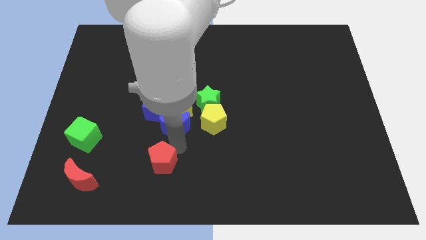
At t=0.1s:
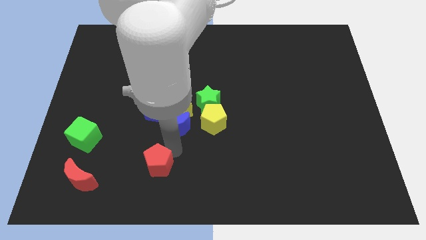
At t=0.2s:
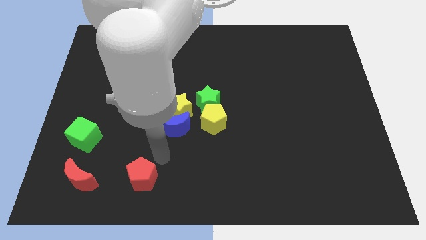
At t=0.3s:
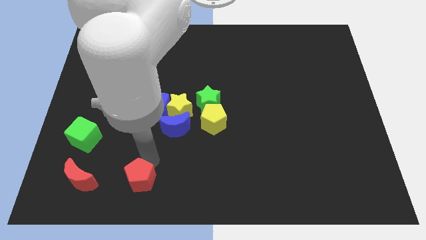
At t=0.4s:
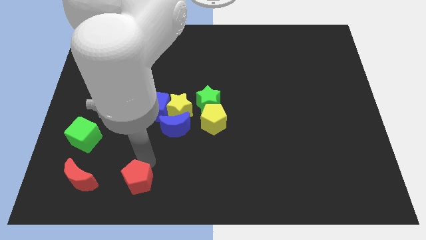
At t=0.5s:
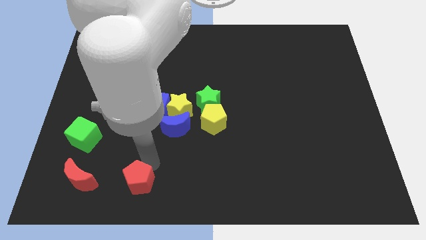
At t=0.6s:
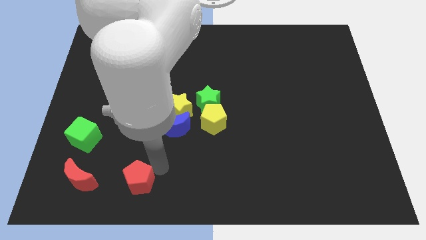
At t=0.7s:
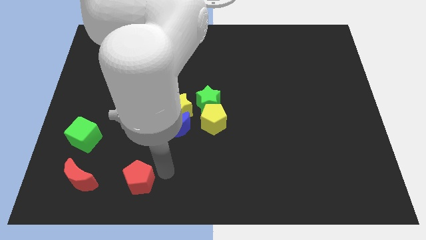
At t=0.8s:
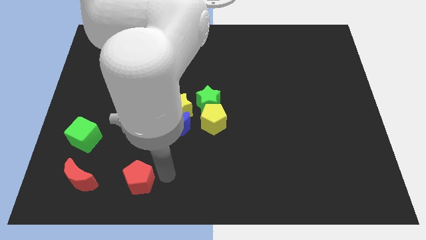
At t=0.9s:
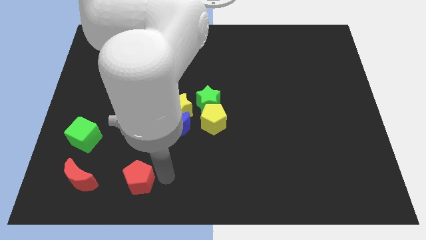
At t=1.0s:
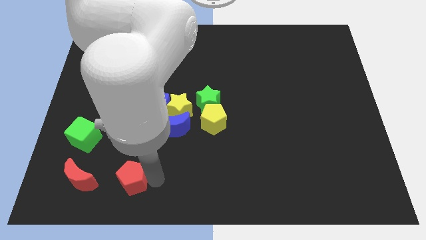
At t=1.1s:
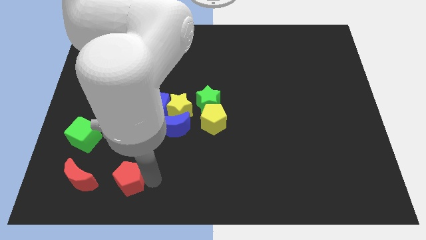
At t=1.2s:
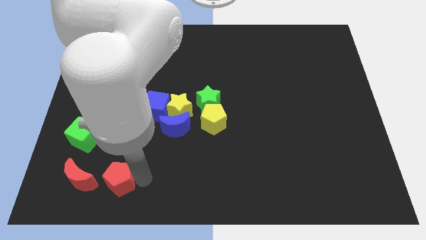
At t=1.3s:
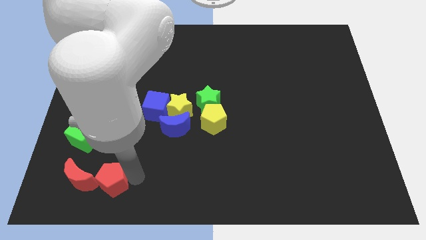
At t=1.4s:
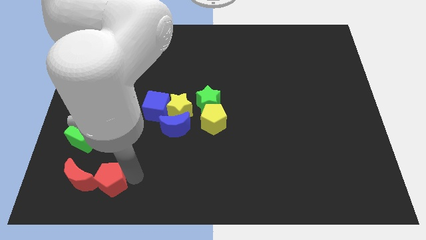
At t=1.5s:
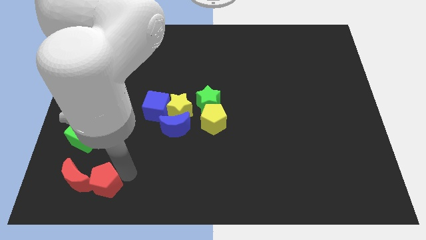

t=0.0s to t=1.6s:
move the red pentagon right to the red crescent

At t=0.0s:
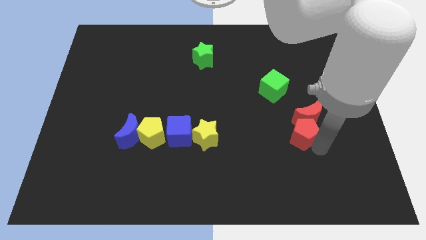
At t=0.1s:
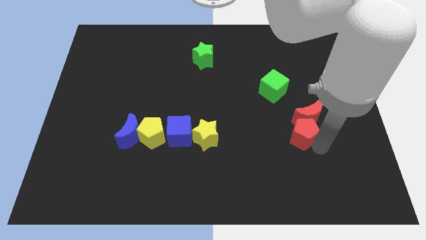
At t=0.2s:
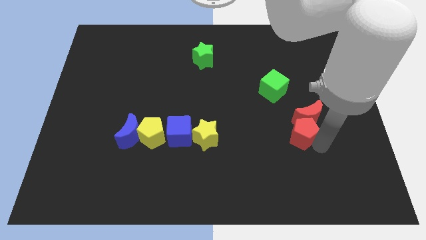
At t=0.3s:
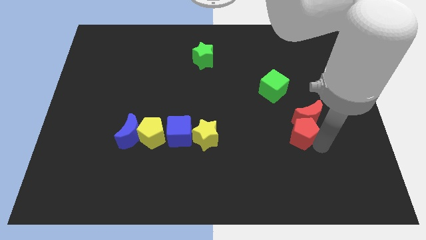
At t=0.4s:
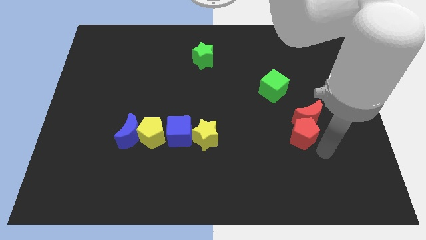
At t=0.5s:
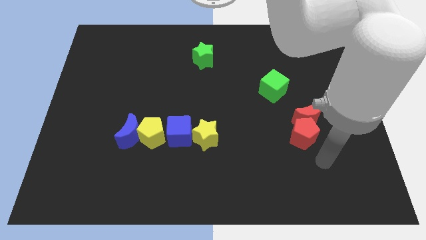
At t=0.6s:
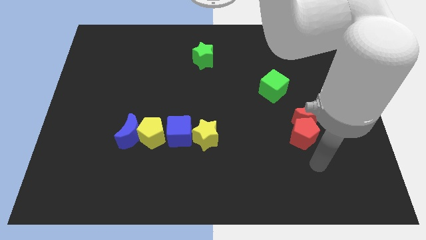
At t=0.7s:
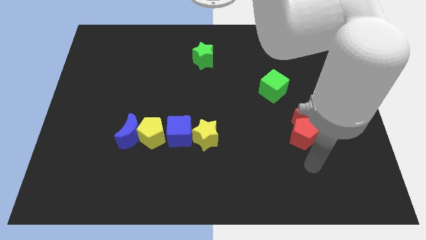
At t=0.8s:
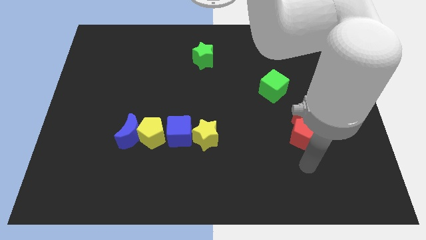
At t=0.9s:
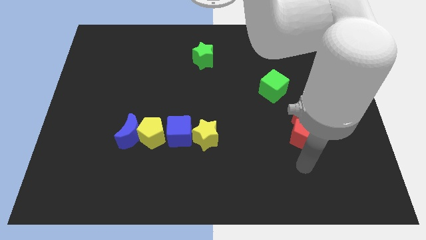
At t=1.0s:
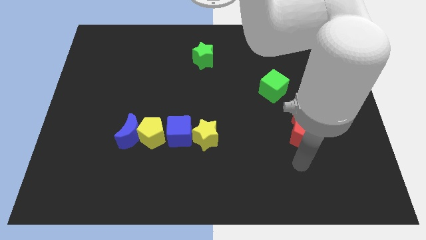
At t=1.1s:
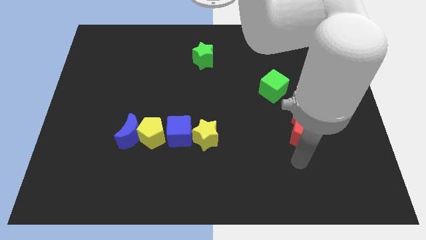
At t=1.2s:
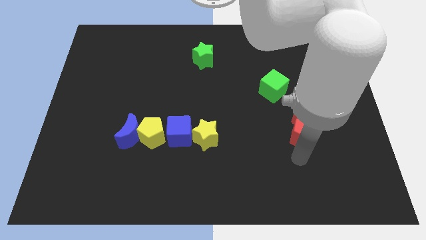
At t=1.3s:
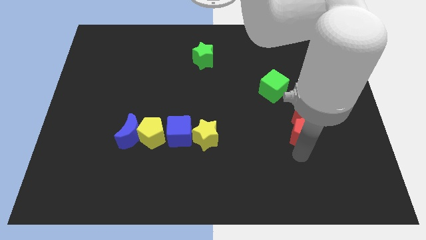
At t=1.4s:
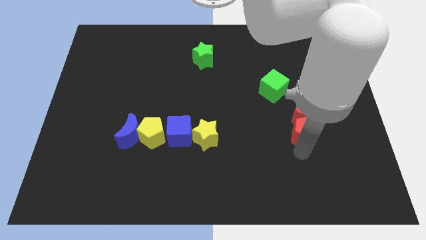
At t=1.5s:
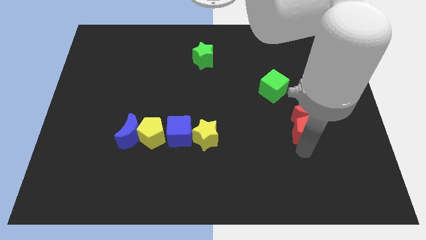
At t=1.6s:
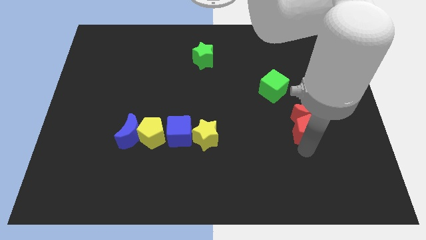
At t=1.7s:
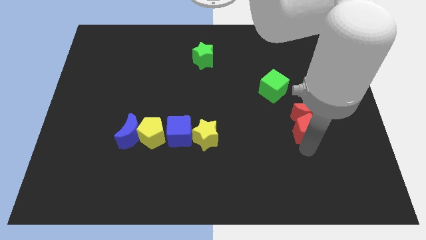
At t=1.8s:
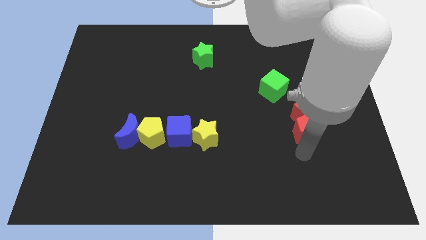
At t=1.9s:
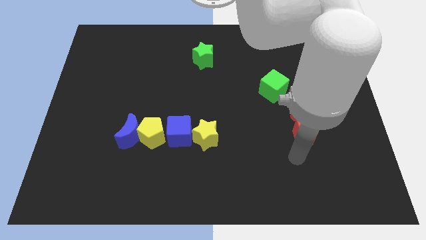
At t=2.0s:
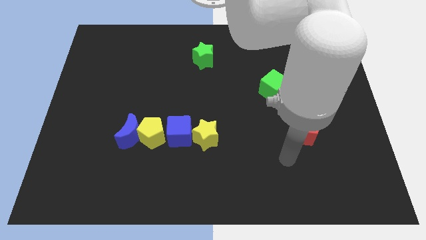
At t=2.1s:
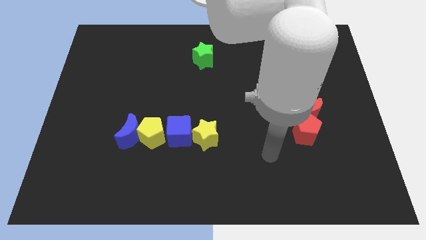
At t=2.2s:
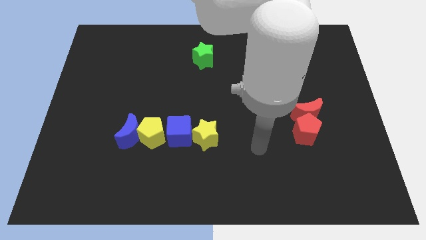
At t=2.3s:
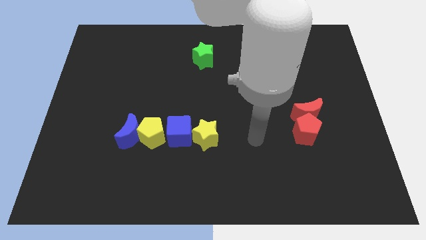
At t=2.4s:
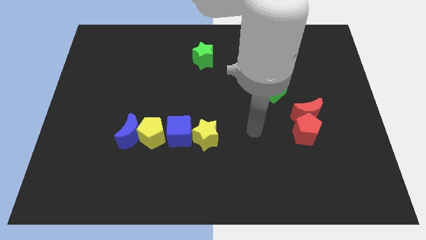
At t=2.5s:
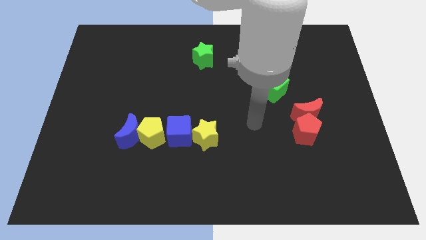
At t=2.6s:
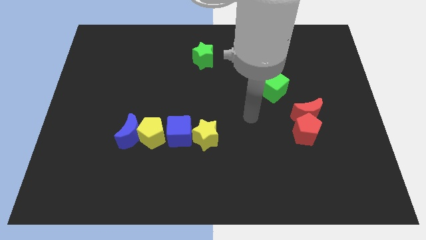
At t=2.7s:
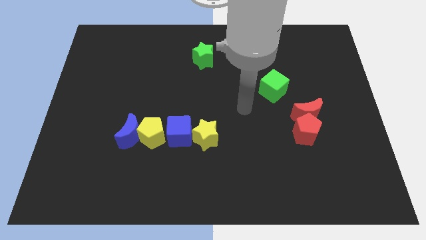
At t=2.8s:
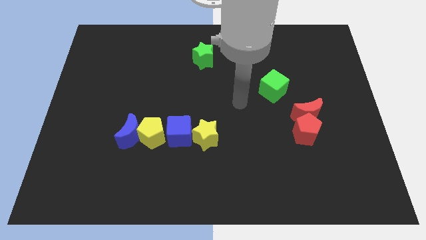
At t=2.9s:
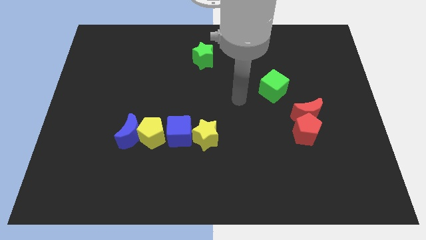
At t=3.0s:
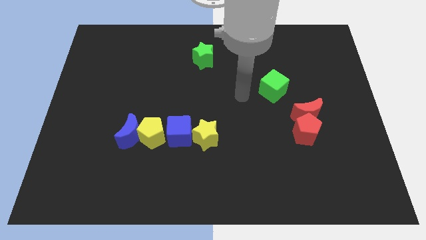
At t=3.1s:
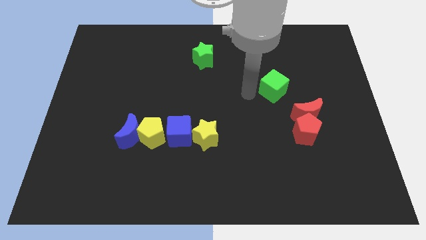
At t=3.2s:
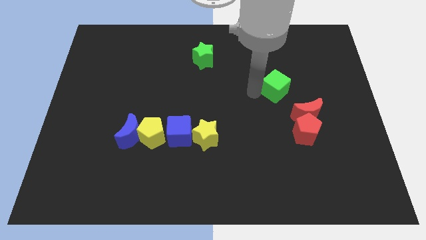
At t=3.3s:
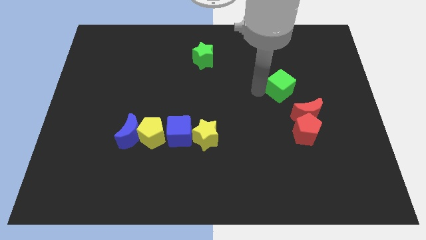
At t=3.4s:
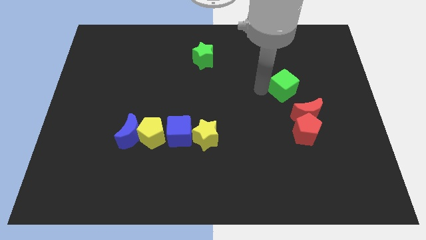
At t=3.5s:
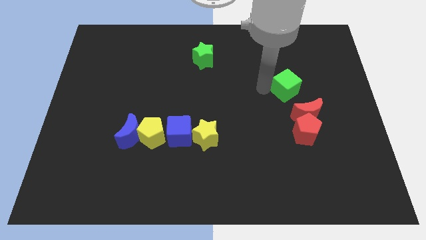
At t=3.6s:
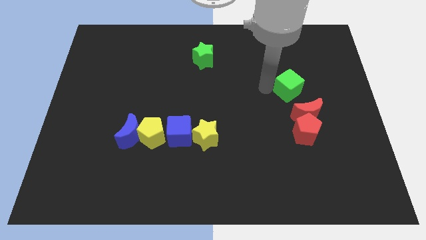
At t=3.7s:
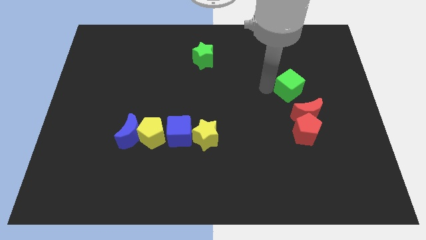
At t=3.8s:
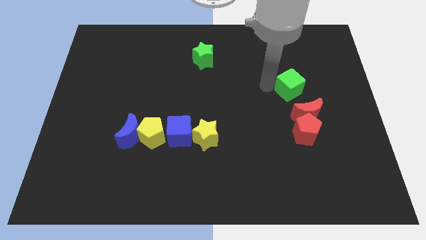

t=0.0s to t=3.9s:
push green cube slightly to the right

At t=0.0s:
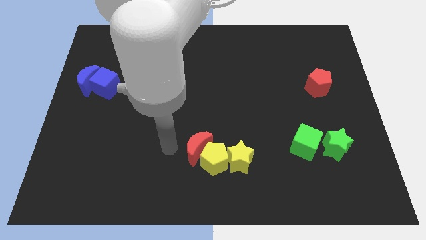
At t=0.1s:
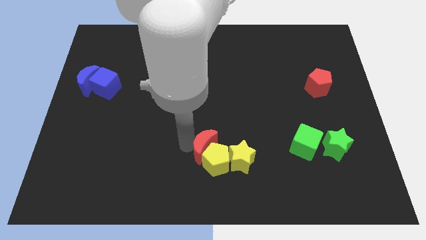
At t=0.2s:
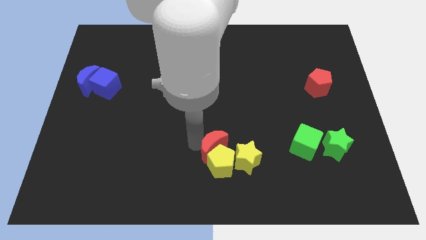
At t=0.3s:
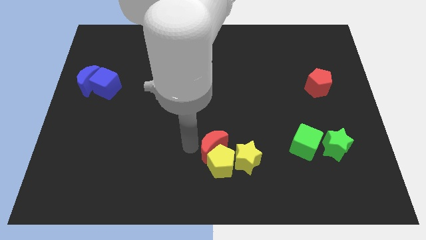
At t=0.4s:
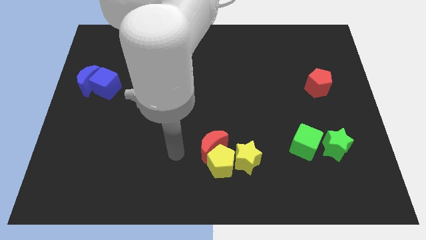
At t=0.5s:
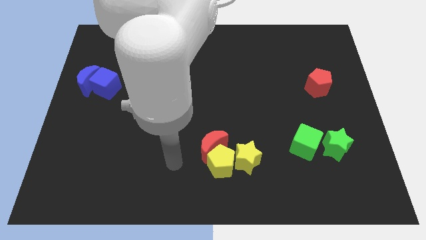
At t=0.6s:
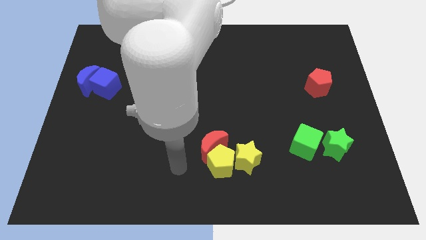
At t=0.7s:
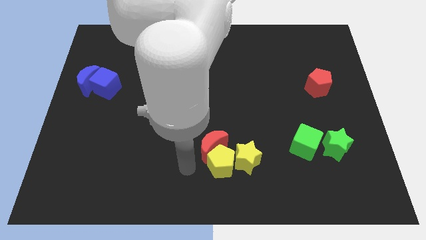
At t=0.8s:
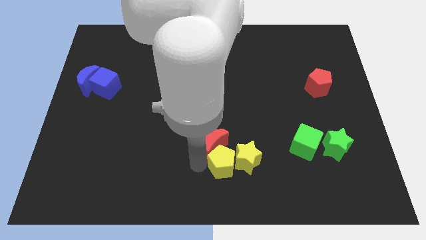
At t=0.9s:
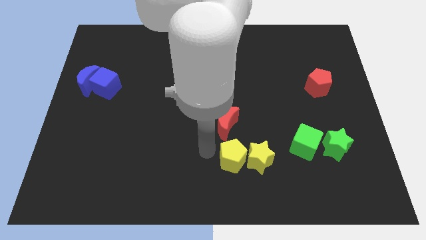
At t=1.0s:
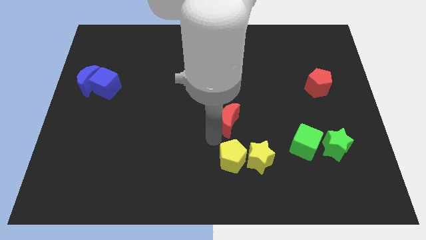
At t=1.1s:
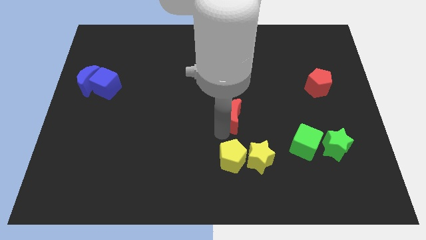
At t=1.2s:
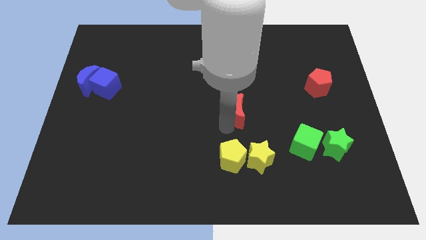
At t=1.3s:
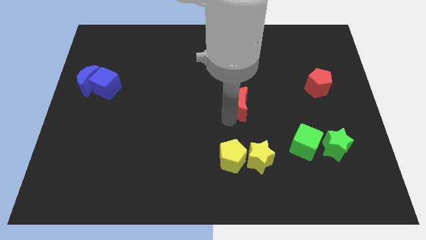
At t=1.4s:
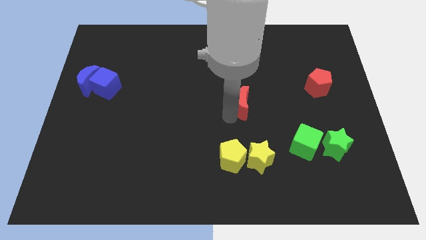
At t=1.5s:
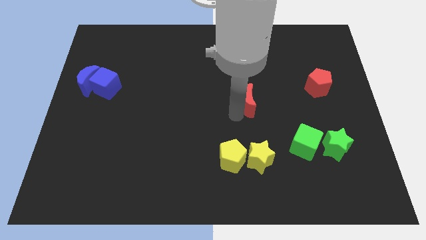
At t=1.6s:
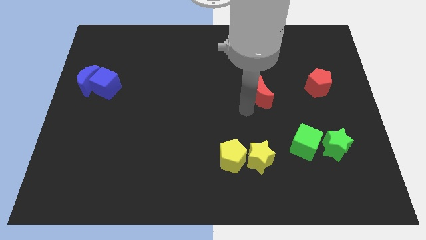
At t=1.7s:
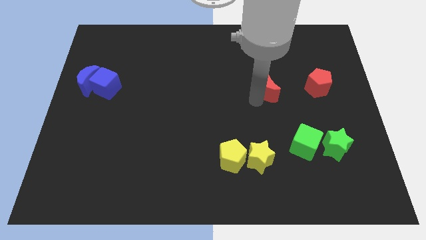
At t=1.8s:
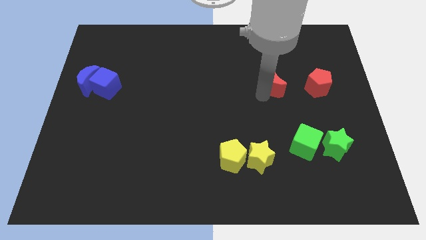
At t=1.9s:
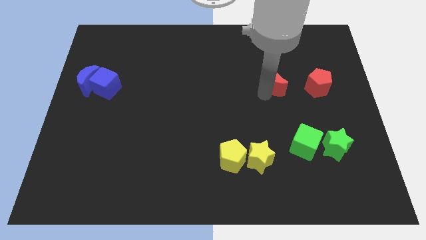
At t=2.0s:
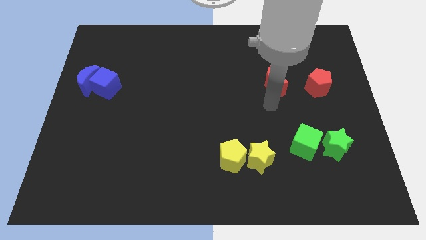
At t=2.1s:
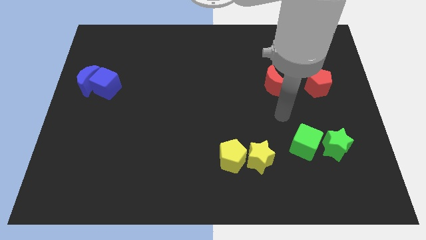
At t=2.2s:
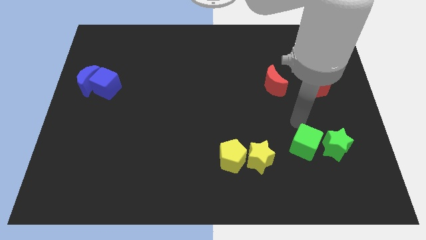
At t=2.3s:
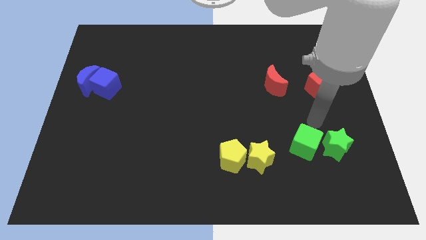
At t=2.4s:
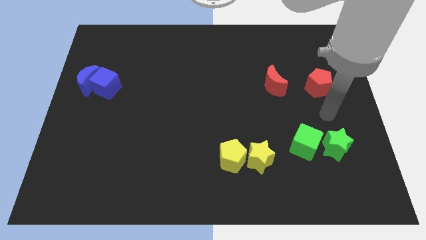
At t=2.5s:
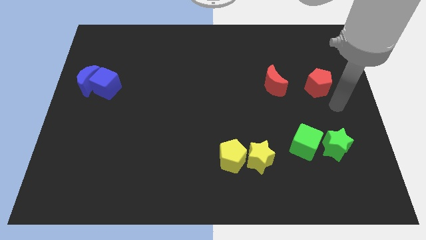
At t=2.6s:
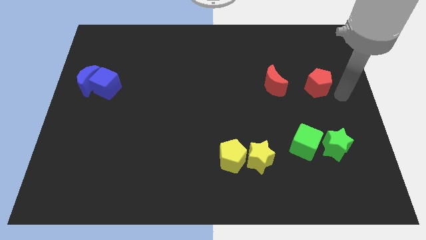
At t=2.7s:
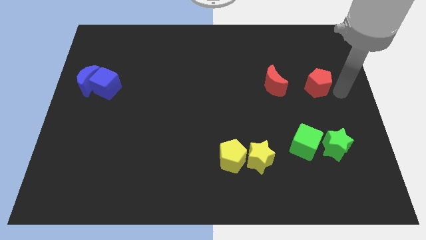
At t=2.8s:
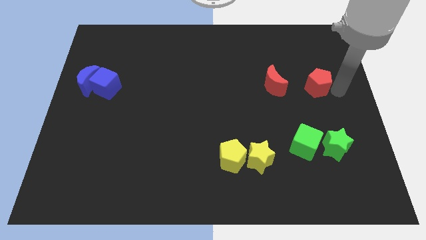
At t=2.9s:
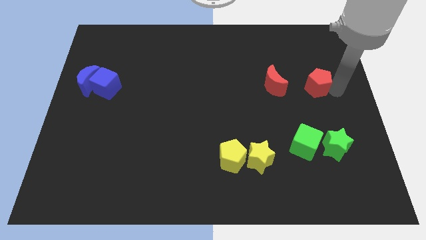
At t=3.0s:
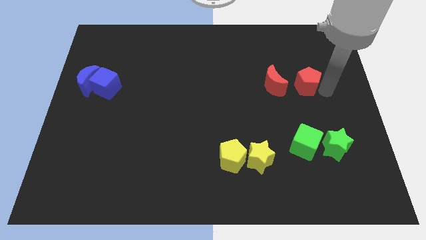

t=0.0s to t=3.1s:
place the red moon left to the red pentagon

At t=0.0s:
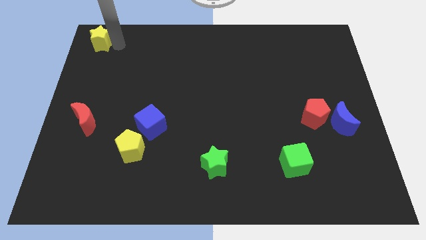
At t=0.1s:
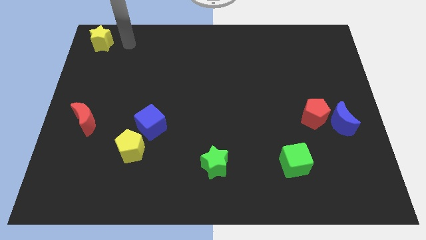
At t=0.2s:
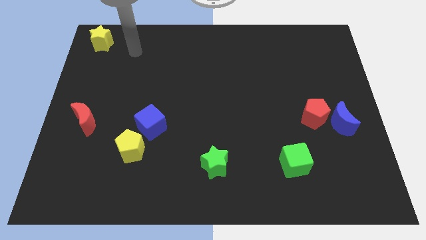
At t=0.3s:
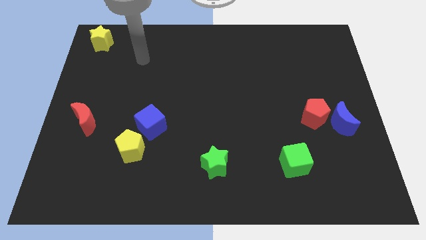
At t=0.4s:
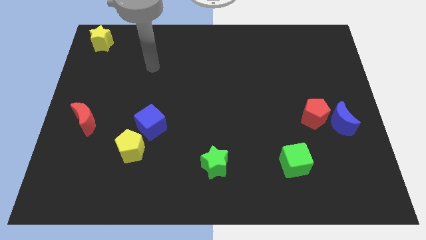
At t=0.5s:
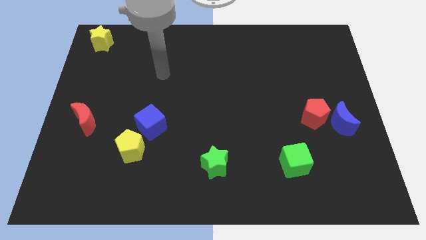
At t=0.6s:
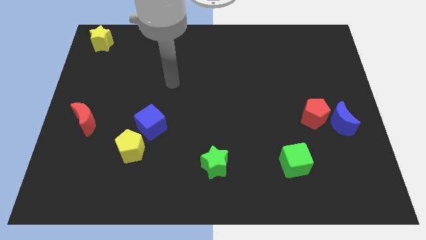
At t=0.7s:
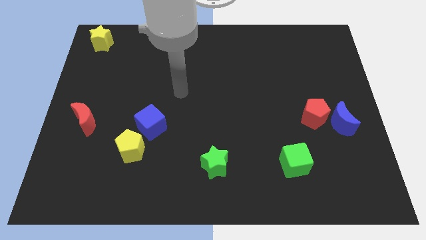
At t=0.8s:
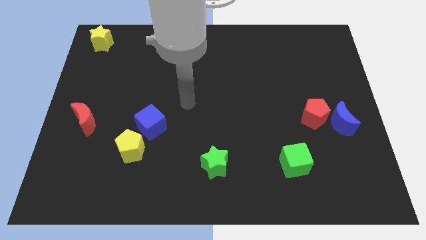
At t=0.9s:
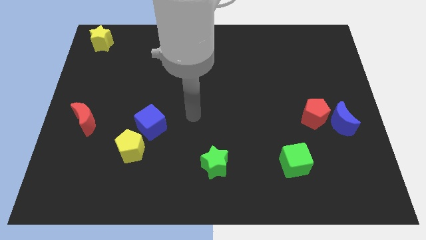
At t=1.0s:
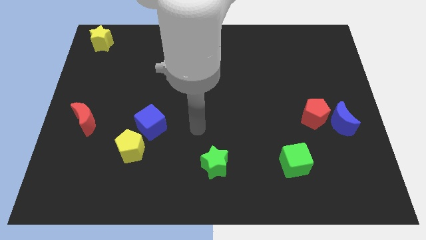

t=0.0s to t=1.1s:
take your hand away from the yellow star
